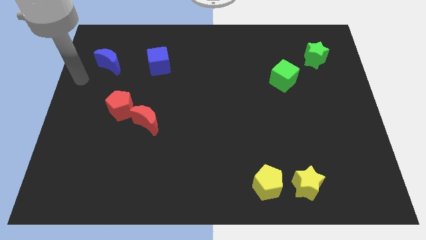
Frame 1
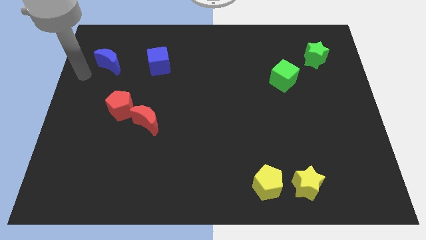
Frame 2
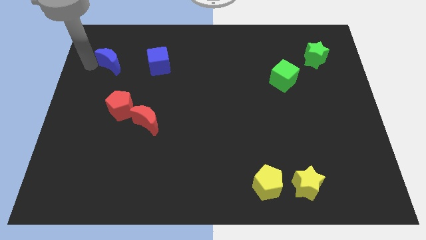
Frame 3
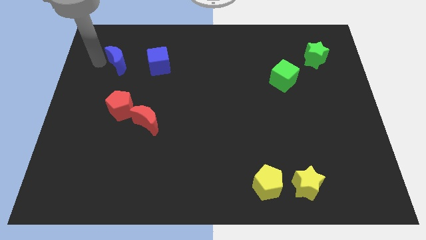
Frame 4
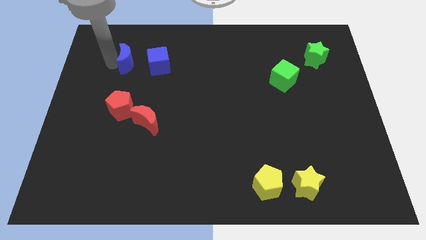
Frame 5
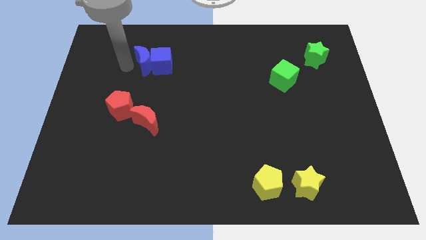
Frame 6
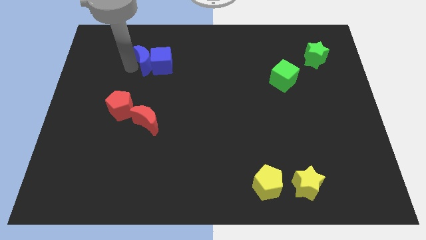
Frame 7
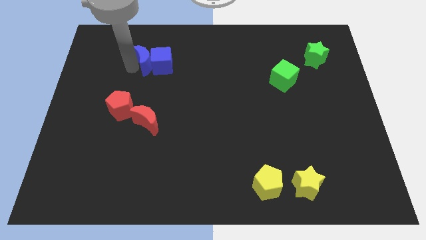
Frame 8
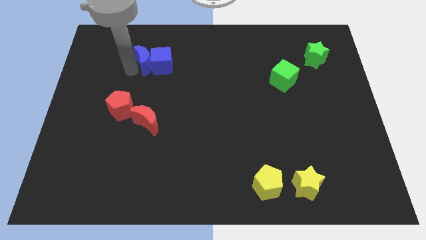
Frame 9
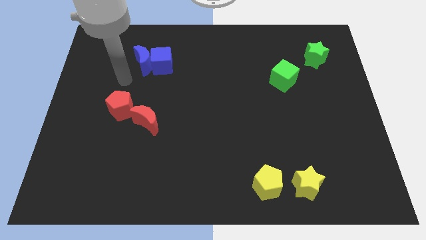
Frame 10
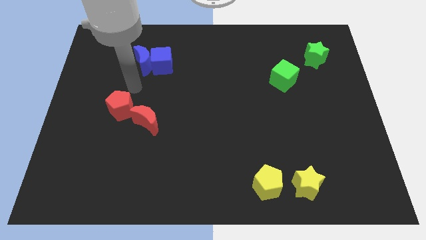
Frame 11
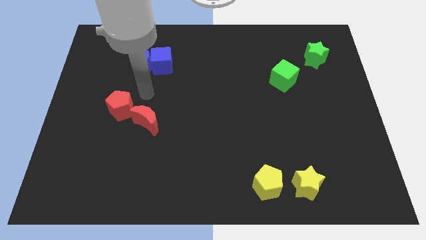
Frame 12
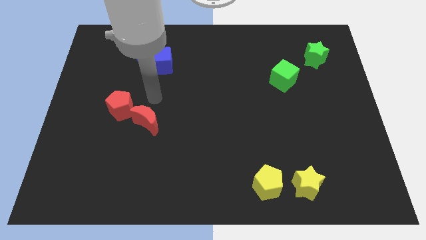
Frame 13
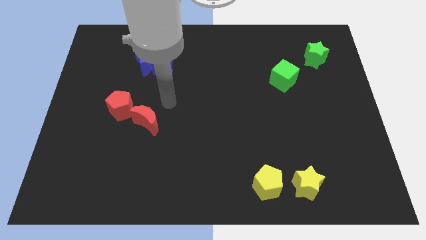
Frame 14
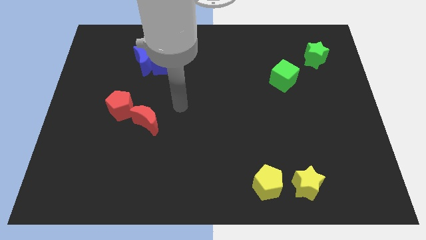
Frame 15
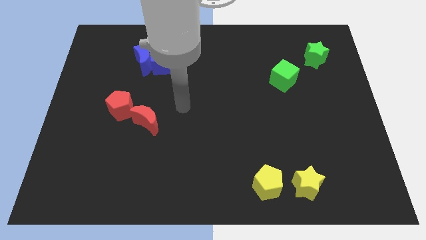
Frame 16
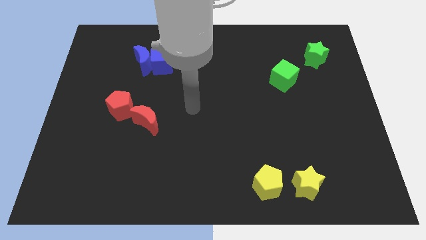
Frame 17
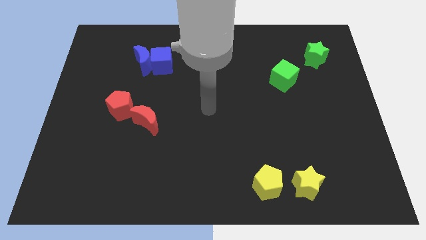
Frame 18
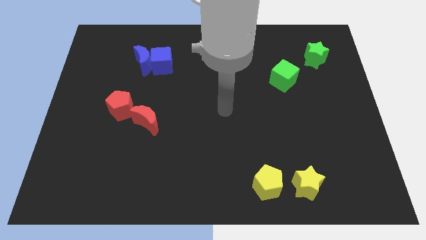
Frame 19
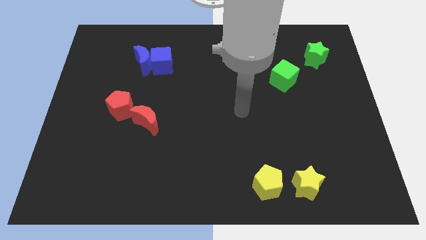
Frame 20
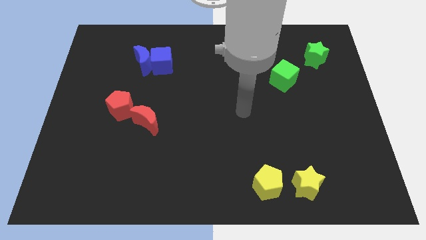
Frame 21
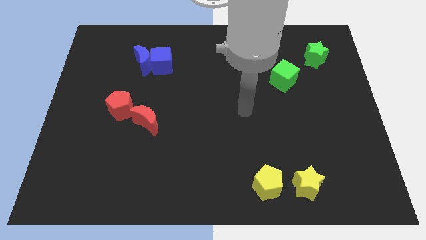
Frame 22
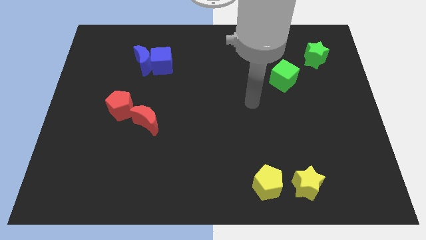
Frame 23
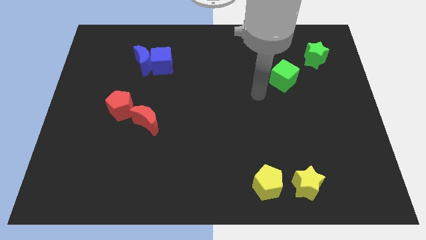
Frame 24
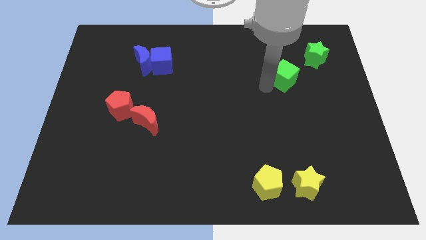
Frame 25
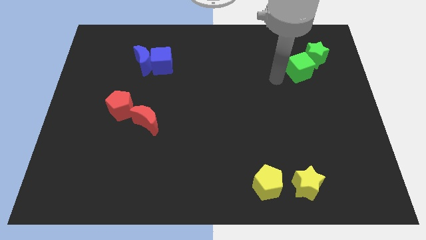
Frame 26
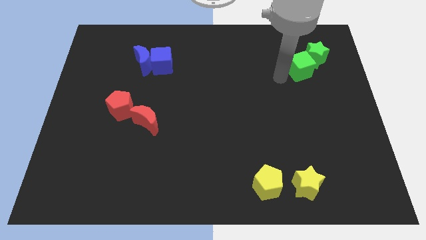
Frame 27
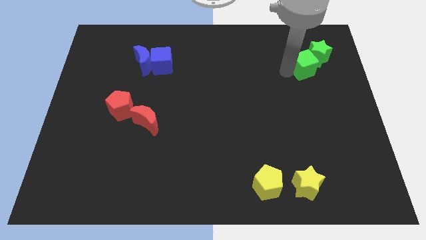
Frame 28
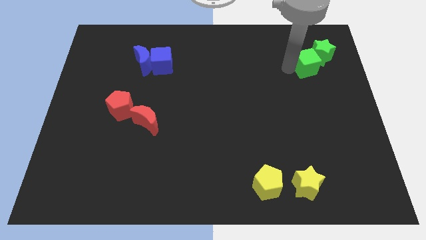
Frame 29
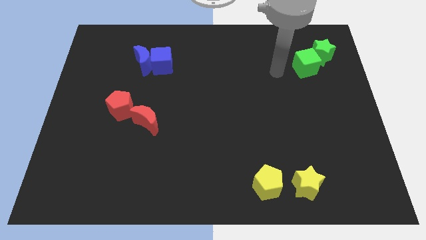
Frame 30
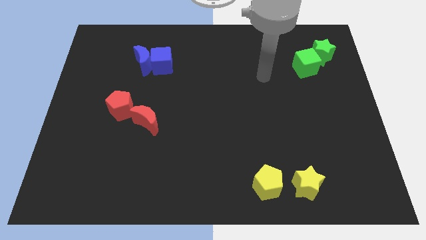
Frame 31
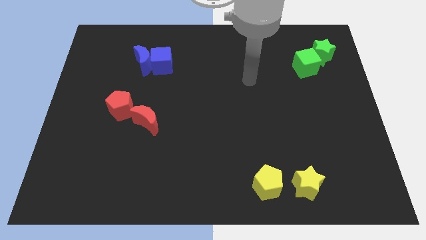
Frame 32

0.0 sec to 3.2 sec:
push the blue moon into the blue cube

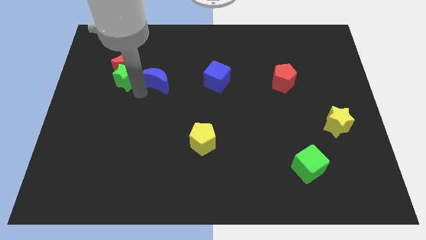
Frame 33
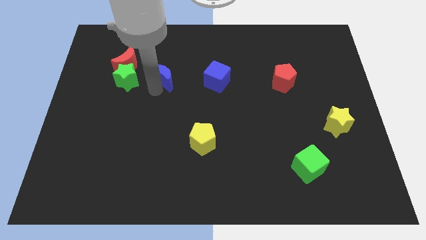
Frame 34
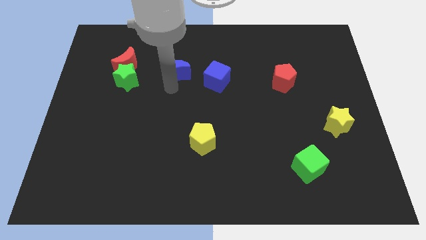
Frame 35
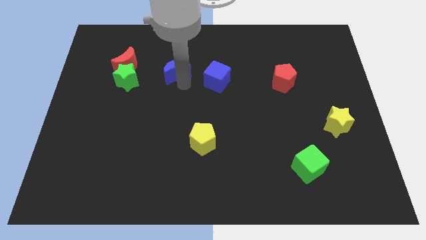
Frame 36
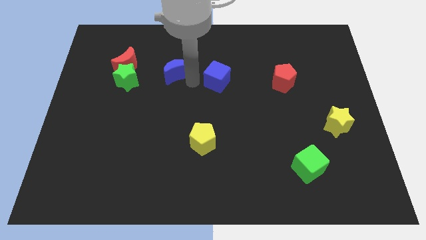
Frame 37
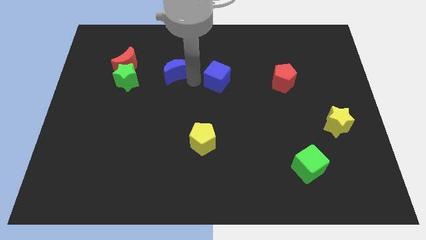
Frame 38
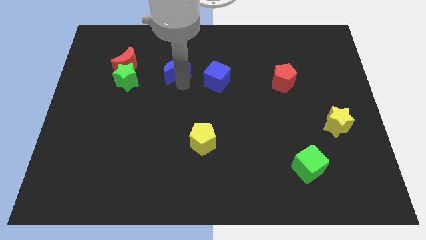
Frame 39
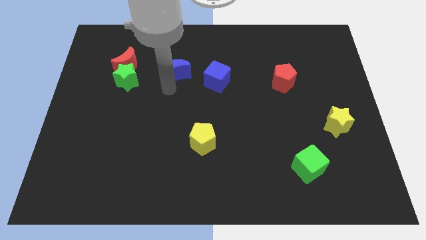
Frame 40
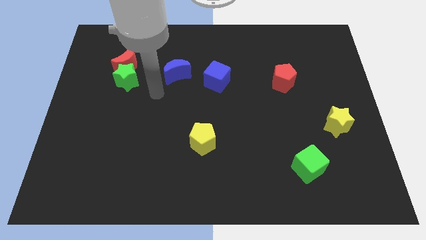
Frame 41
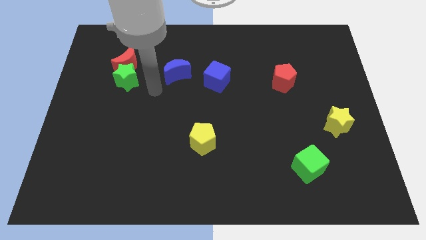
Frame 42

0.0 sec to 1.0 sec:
place the blue moon to the left side of blue cube

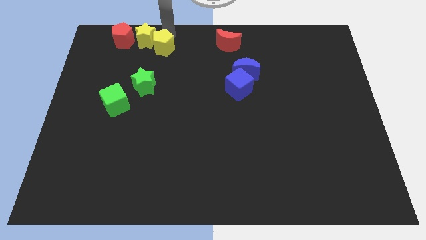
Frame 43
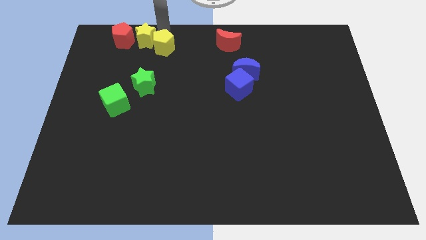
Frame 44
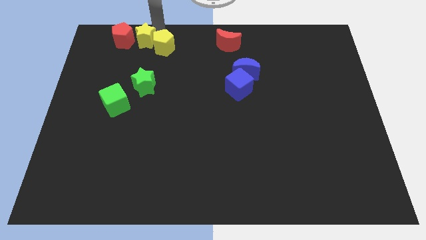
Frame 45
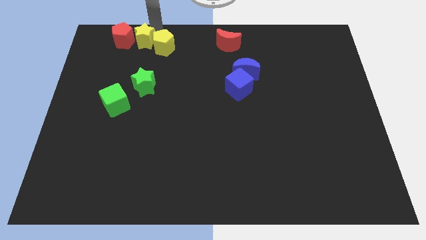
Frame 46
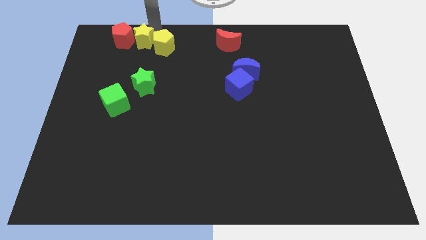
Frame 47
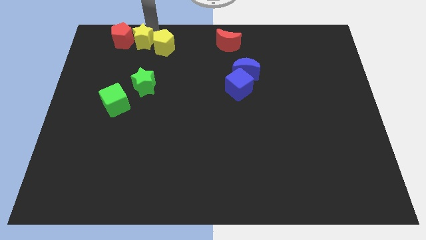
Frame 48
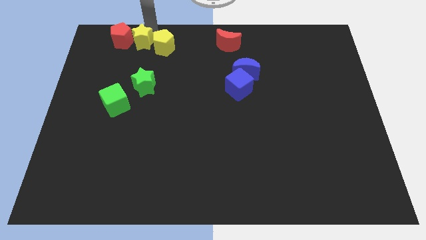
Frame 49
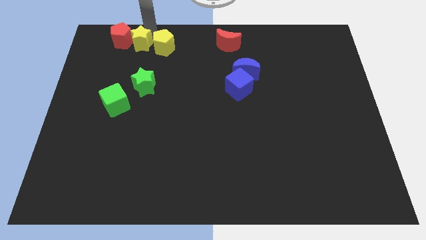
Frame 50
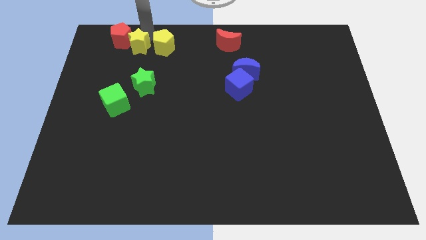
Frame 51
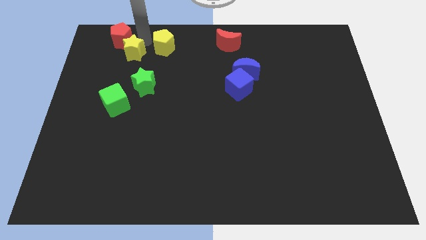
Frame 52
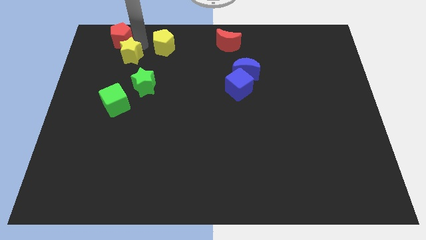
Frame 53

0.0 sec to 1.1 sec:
move the yellow star slightly down

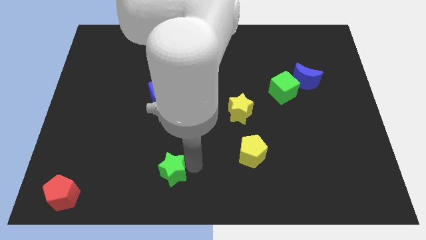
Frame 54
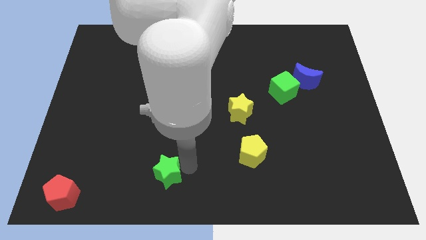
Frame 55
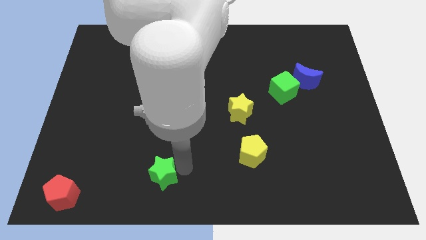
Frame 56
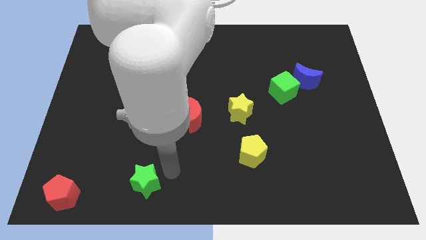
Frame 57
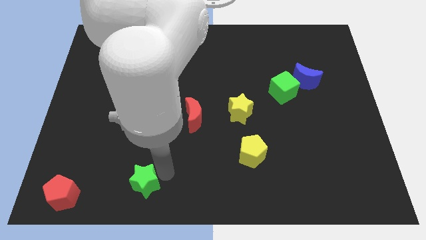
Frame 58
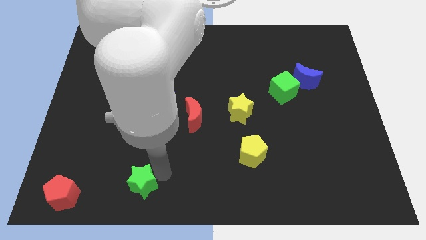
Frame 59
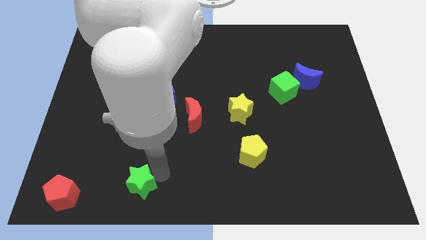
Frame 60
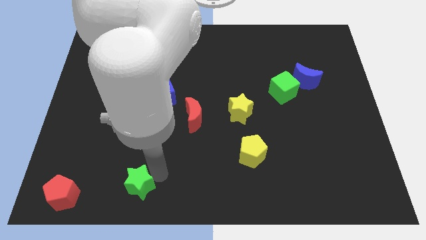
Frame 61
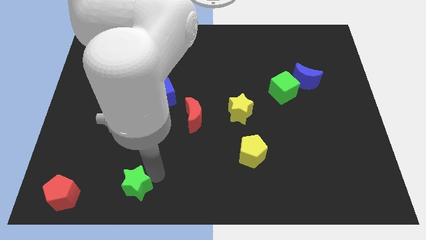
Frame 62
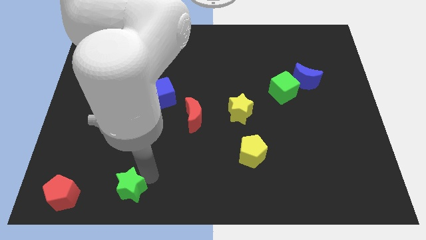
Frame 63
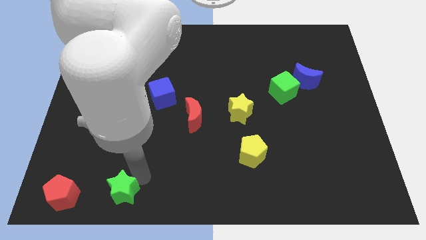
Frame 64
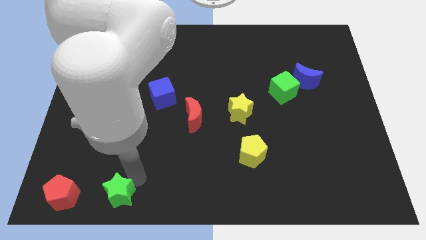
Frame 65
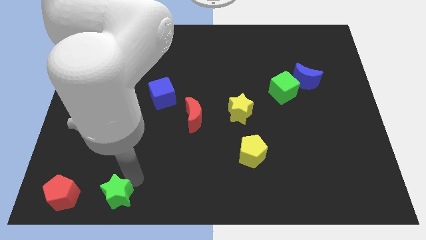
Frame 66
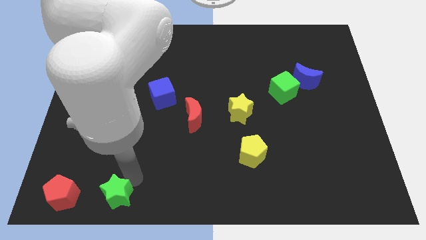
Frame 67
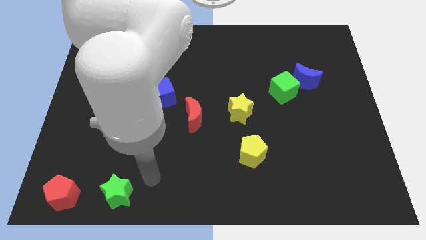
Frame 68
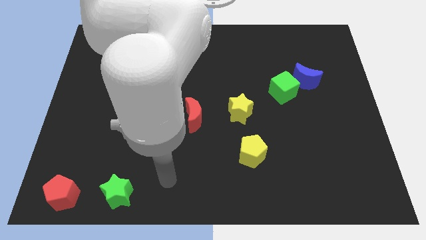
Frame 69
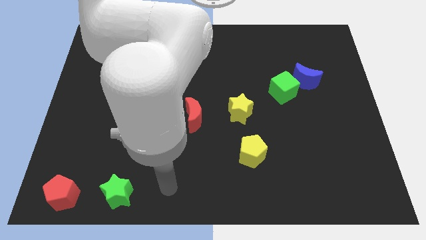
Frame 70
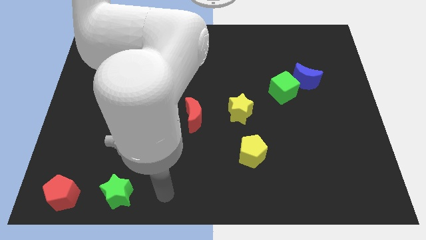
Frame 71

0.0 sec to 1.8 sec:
place the green star to the right of the red pentagon

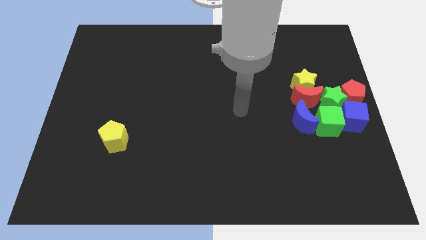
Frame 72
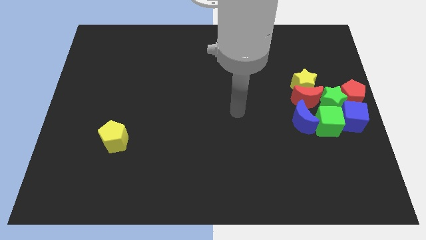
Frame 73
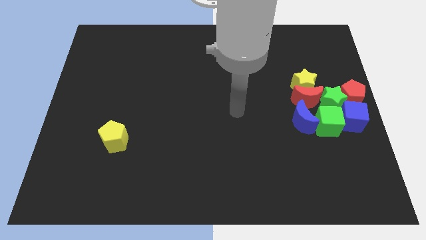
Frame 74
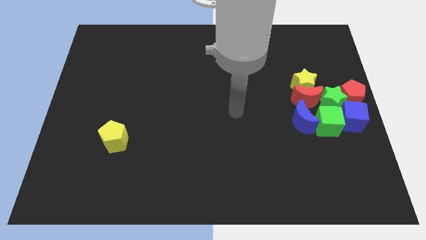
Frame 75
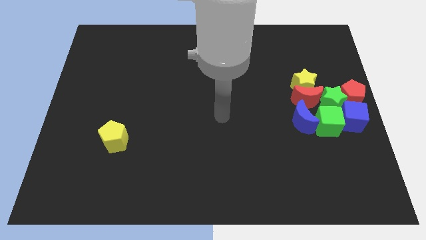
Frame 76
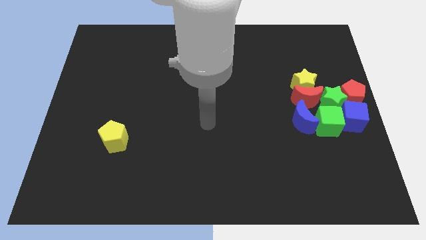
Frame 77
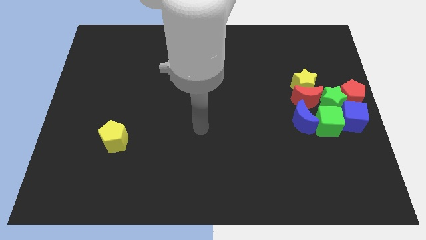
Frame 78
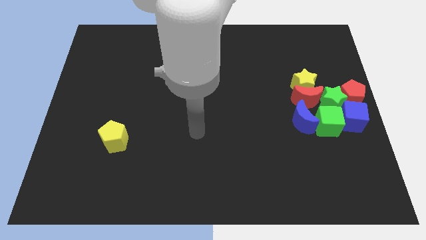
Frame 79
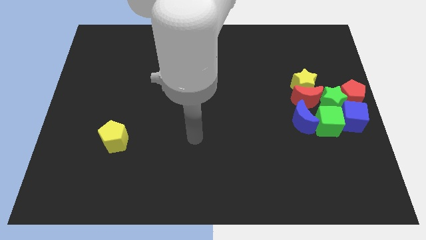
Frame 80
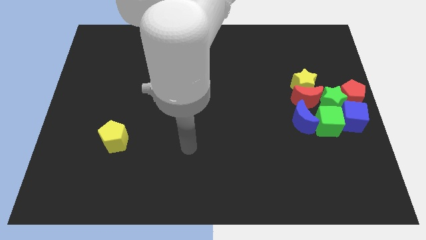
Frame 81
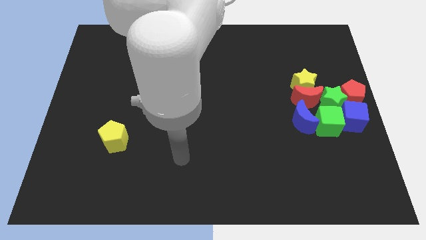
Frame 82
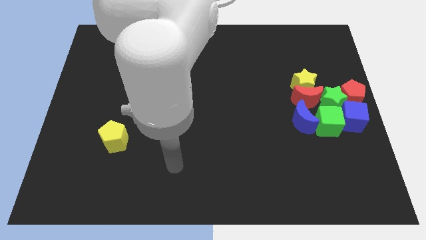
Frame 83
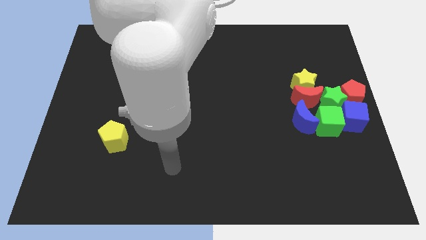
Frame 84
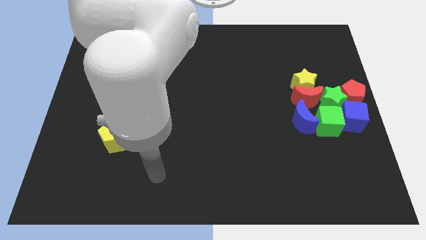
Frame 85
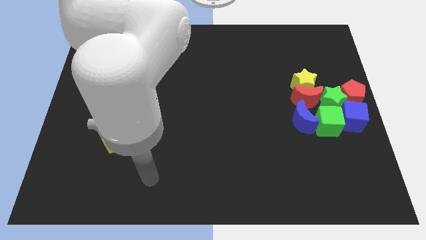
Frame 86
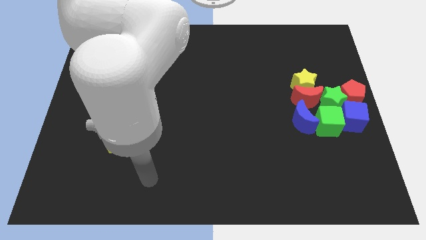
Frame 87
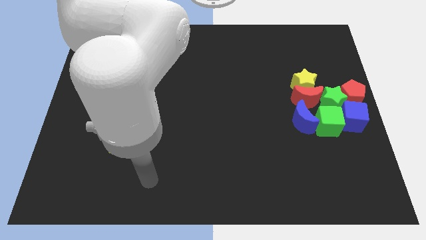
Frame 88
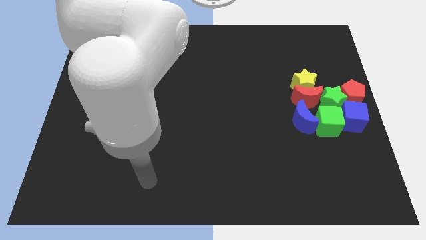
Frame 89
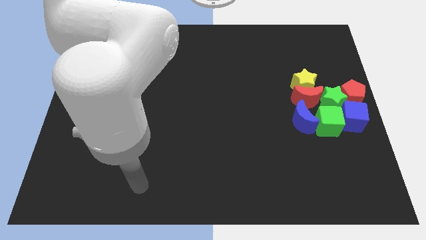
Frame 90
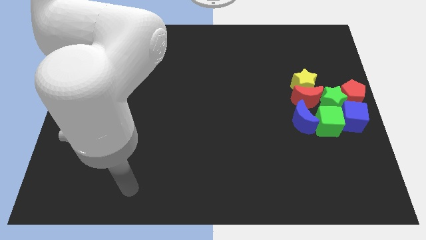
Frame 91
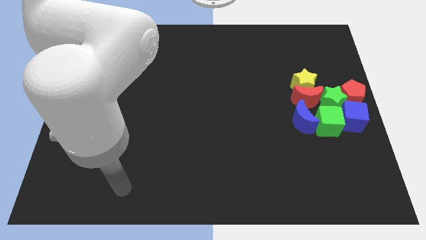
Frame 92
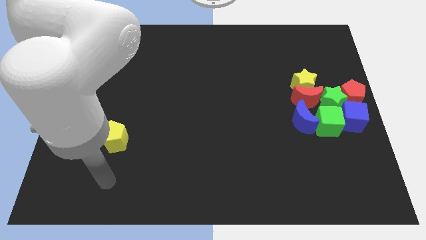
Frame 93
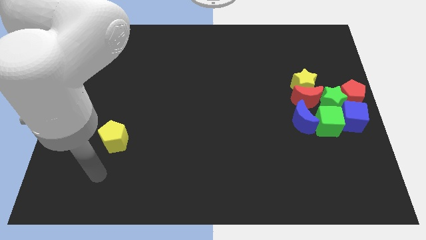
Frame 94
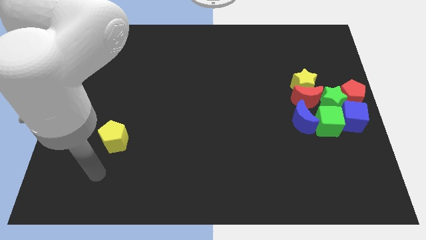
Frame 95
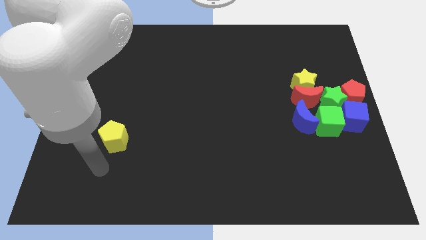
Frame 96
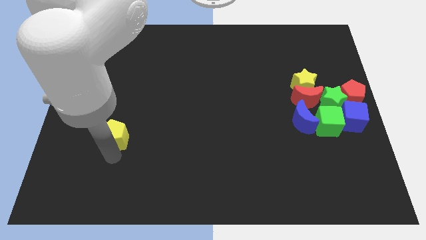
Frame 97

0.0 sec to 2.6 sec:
touch the bottom of yellow pentagon
